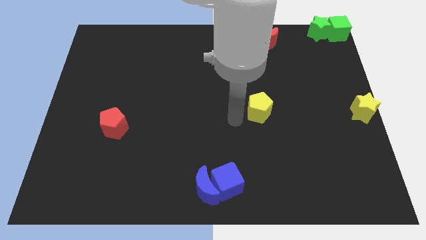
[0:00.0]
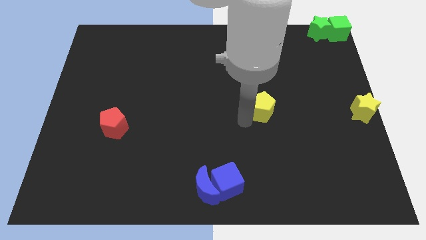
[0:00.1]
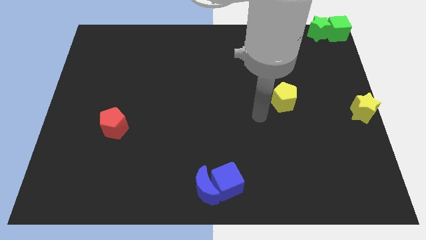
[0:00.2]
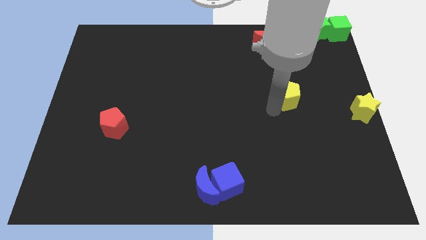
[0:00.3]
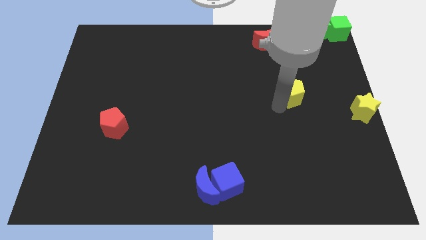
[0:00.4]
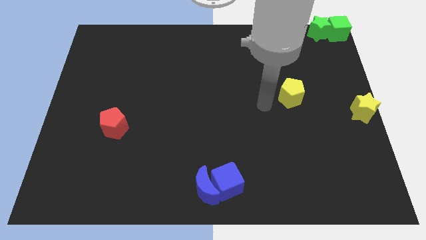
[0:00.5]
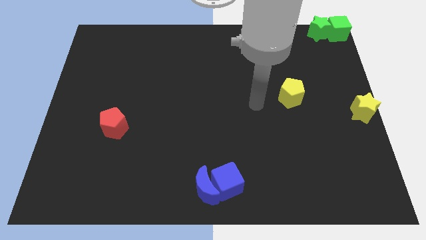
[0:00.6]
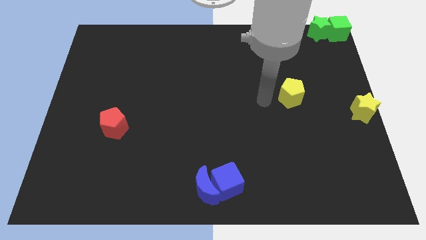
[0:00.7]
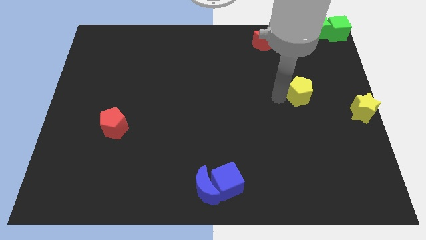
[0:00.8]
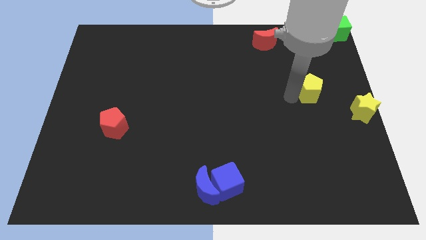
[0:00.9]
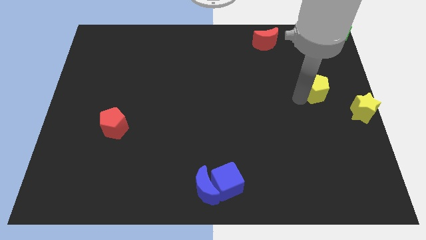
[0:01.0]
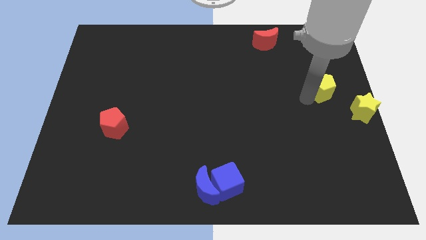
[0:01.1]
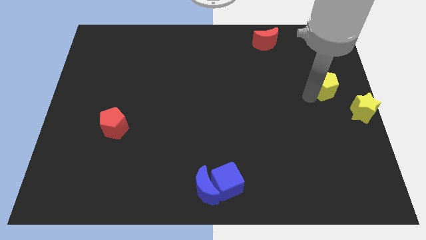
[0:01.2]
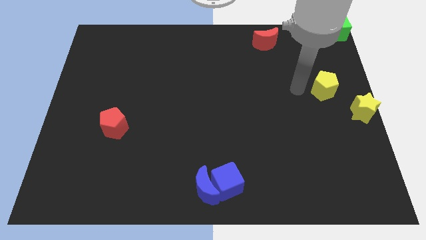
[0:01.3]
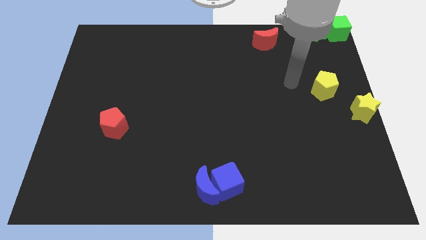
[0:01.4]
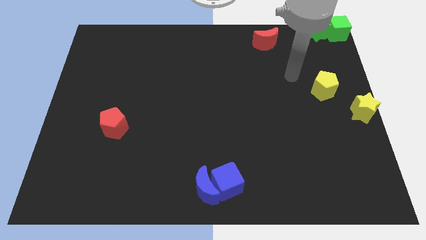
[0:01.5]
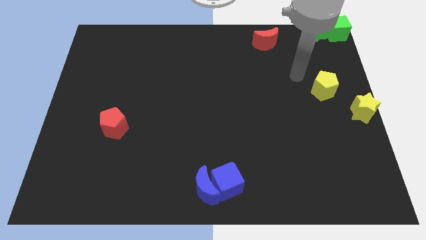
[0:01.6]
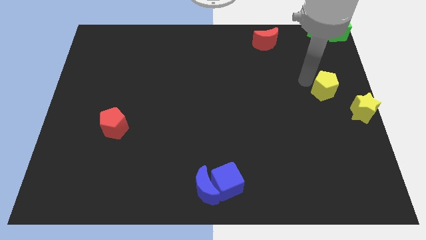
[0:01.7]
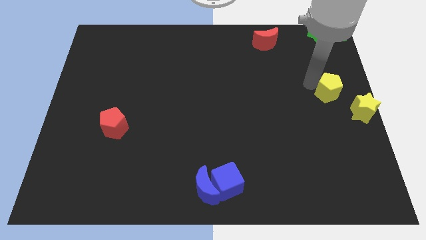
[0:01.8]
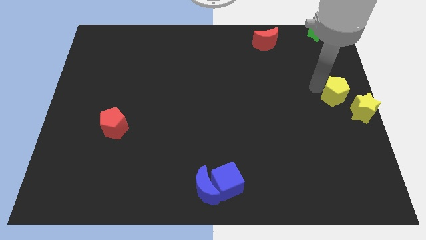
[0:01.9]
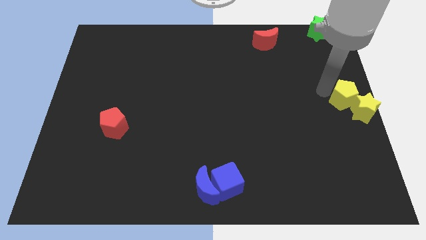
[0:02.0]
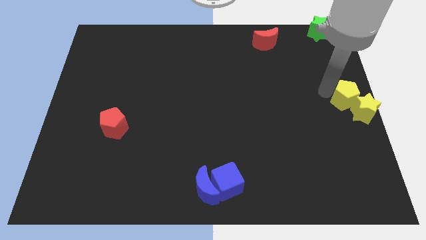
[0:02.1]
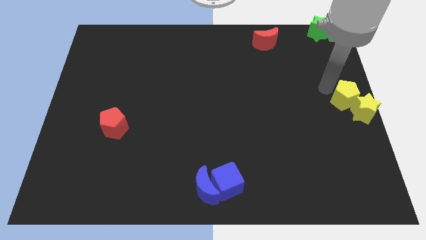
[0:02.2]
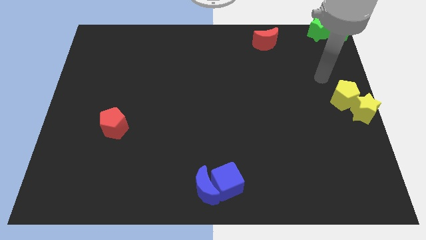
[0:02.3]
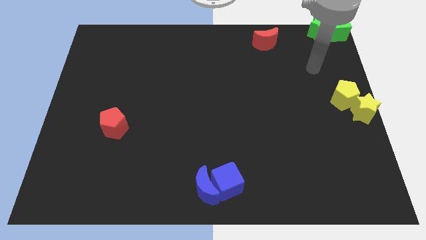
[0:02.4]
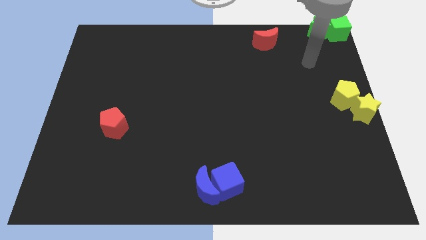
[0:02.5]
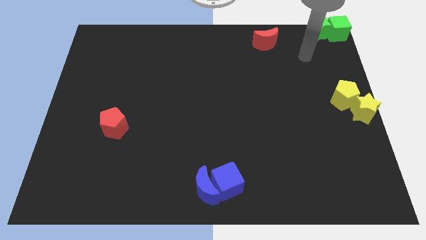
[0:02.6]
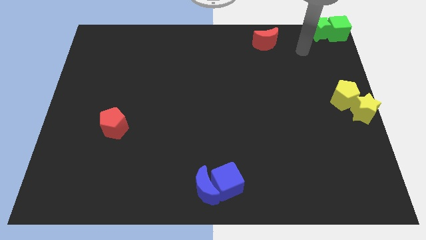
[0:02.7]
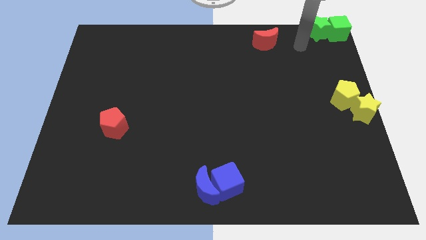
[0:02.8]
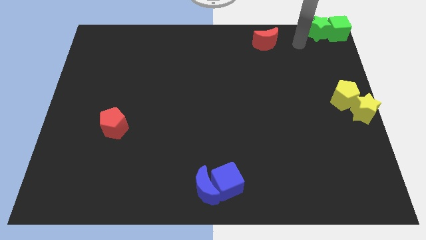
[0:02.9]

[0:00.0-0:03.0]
push the yellow pentagon into yellow star

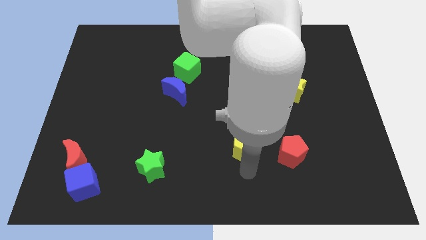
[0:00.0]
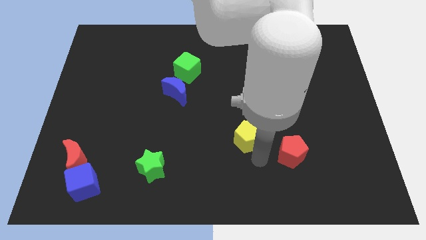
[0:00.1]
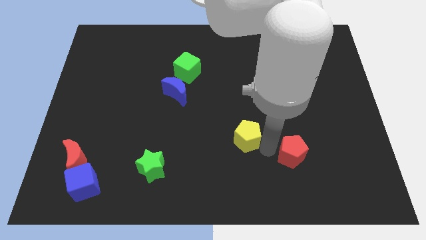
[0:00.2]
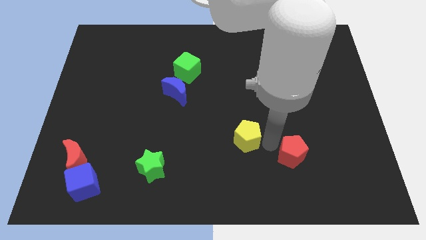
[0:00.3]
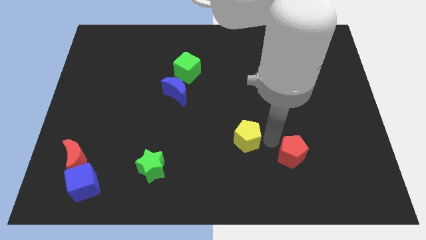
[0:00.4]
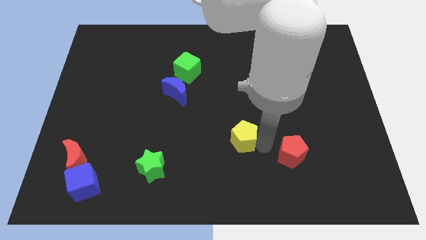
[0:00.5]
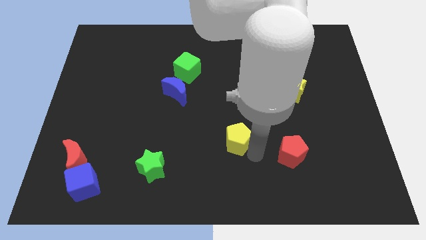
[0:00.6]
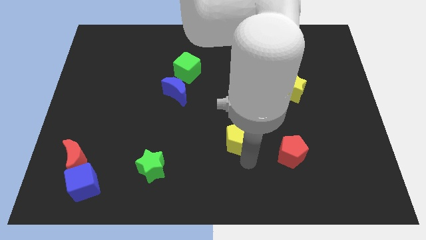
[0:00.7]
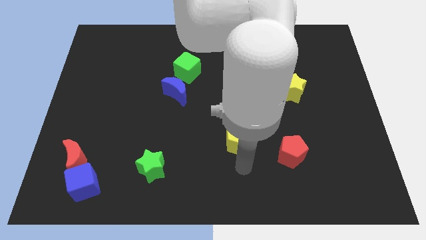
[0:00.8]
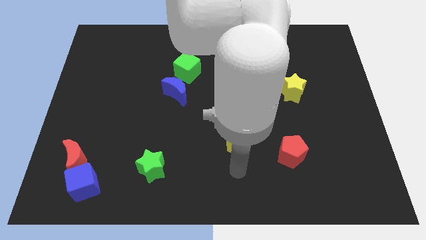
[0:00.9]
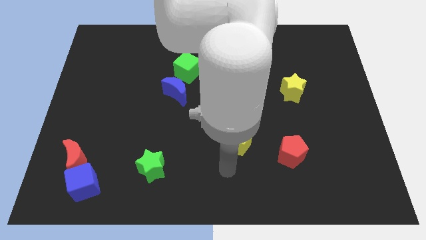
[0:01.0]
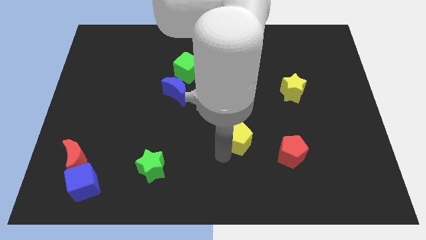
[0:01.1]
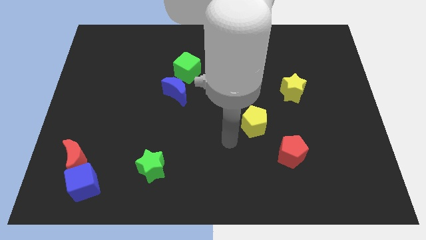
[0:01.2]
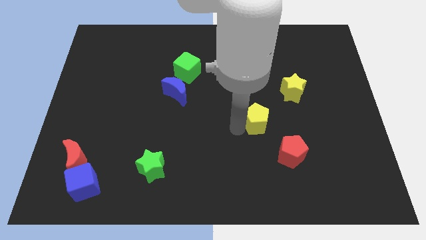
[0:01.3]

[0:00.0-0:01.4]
place the yellow pentagon diagonally to the bottom left of the yellow star

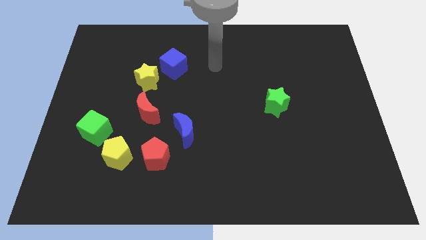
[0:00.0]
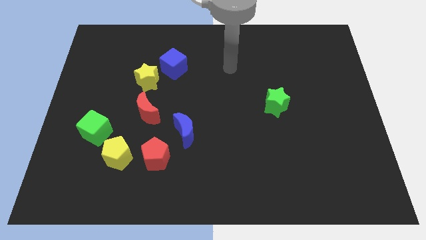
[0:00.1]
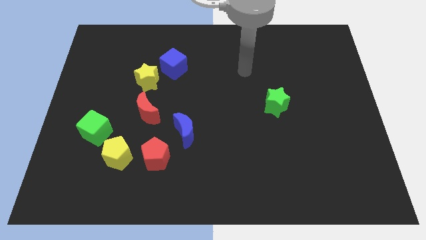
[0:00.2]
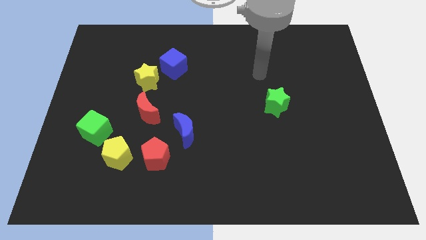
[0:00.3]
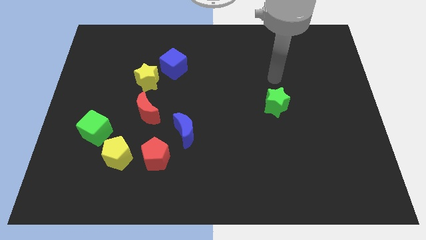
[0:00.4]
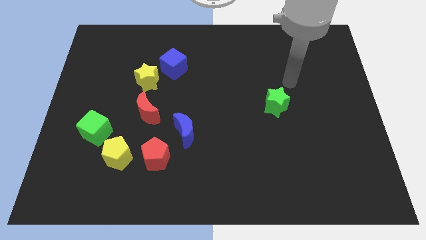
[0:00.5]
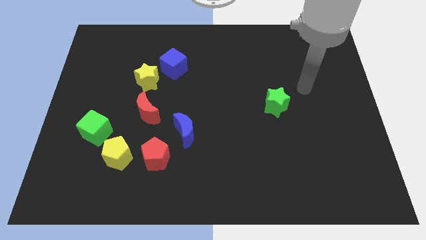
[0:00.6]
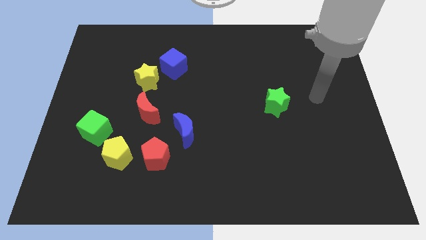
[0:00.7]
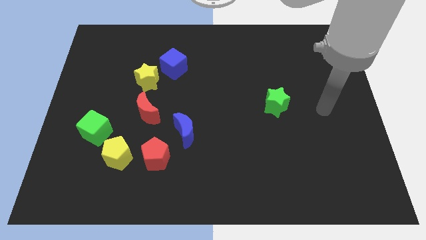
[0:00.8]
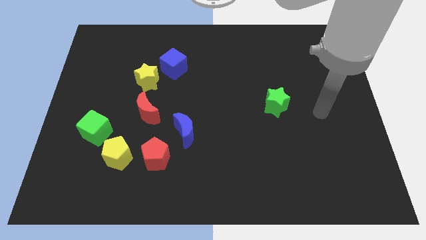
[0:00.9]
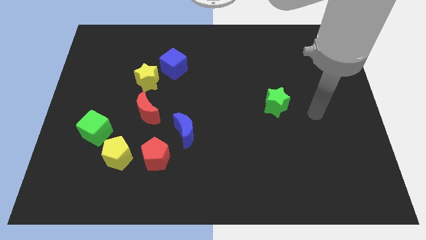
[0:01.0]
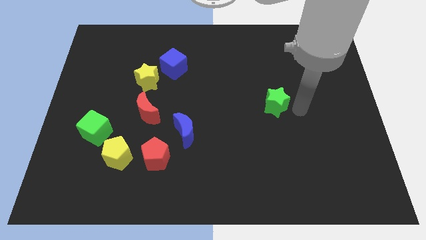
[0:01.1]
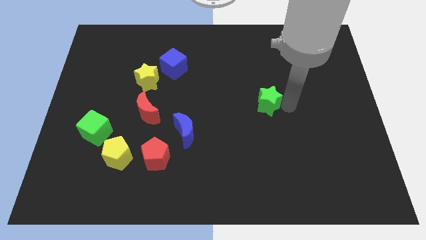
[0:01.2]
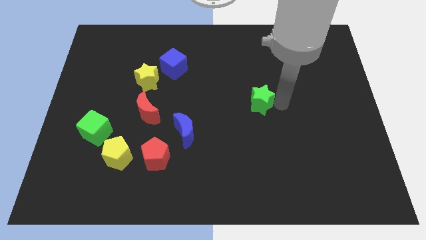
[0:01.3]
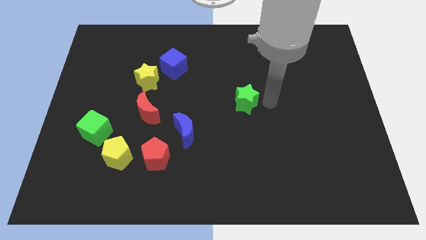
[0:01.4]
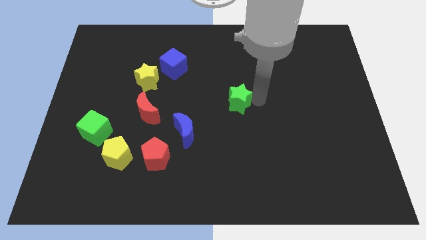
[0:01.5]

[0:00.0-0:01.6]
push the green star to the left

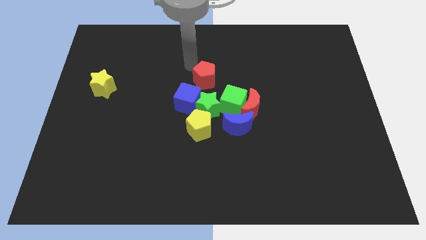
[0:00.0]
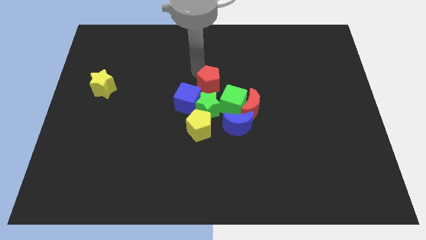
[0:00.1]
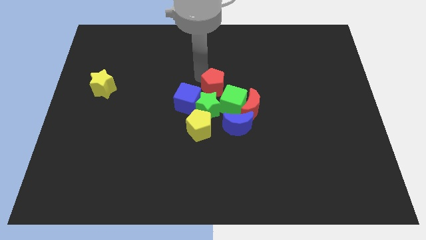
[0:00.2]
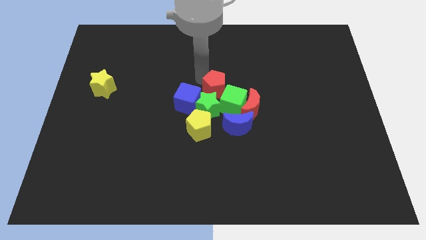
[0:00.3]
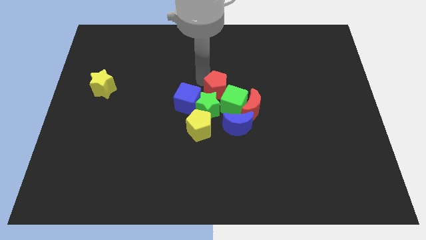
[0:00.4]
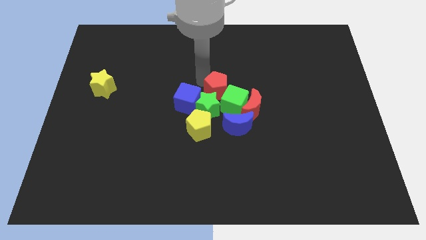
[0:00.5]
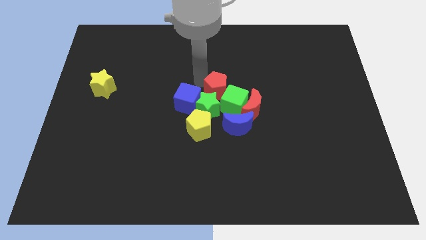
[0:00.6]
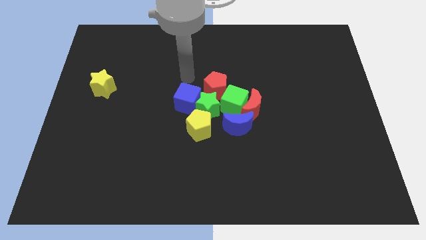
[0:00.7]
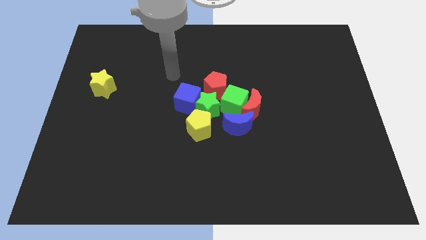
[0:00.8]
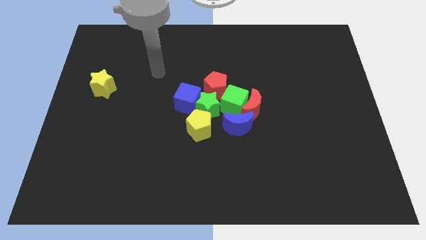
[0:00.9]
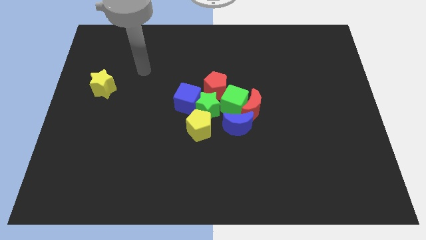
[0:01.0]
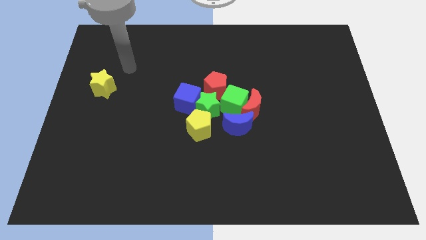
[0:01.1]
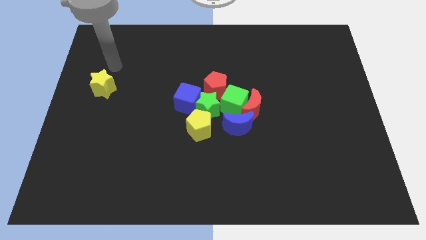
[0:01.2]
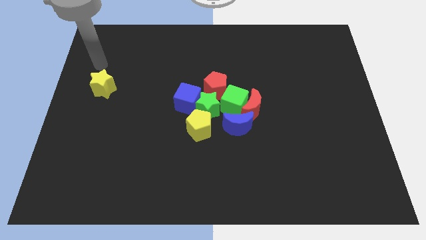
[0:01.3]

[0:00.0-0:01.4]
push the red pentagon into the group of blocks

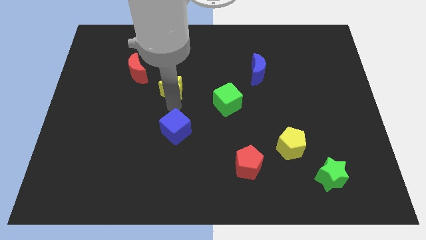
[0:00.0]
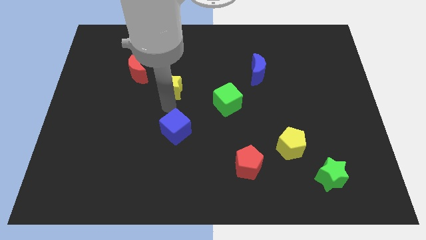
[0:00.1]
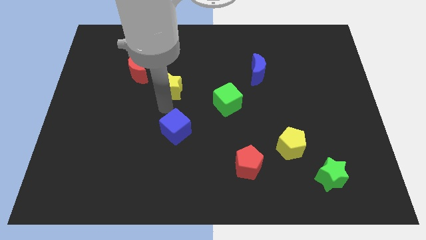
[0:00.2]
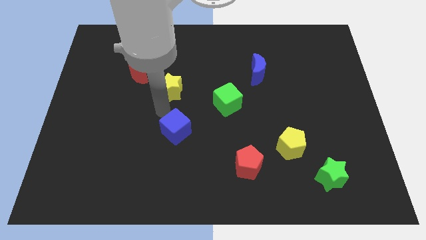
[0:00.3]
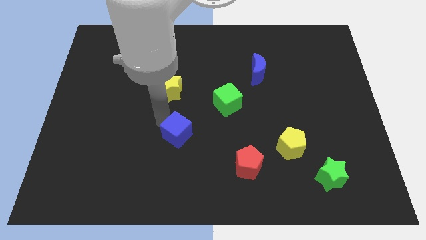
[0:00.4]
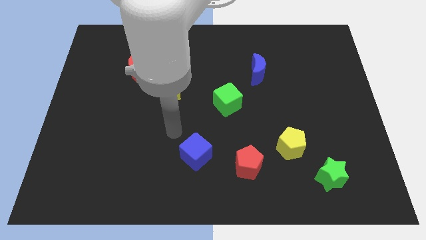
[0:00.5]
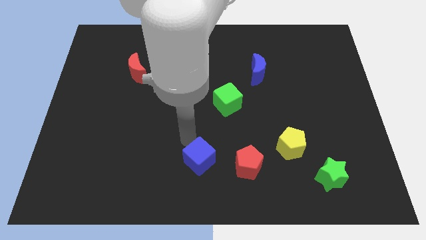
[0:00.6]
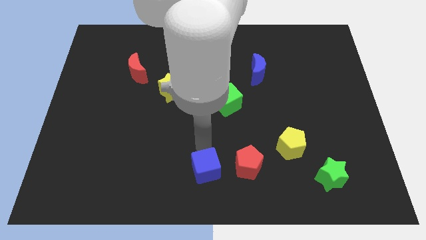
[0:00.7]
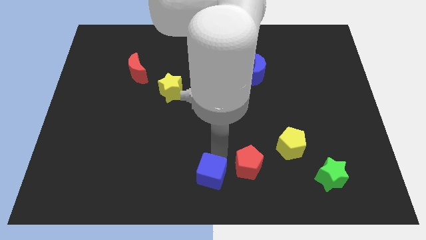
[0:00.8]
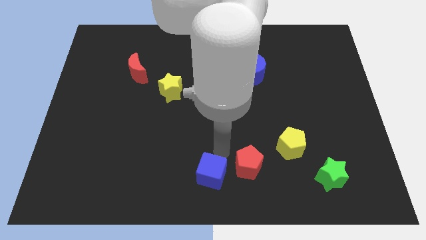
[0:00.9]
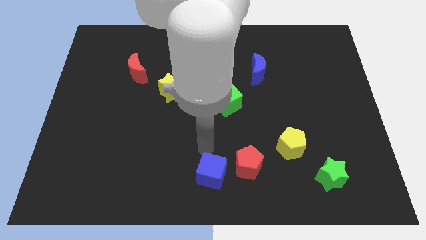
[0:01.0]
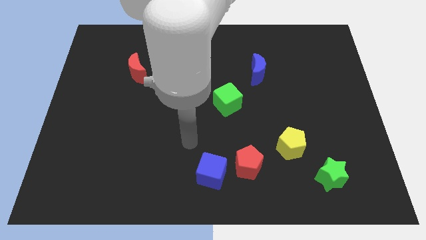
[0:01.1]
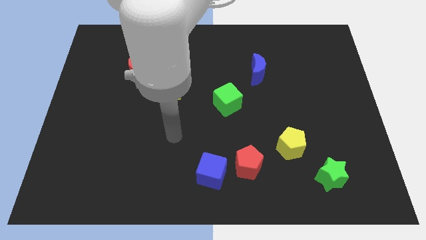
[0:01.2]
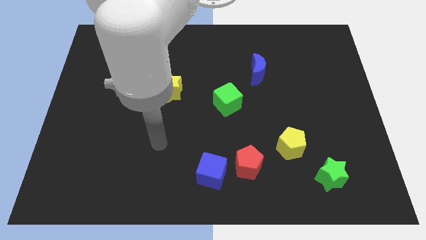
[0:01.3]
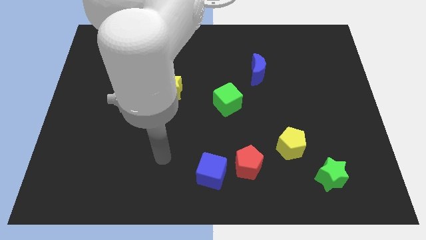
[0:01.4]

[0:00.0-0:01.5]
place blue cube to the left of red pentagon
